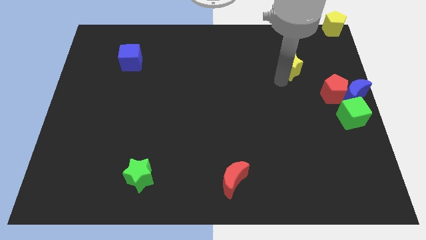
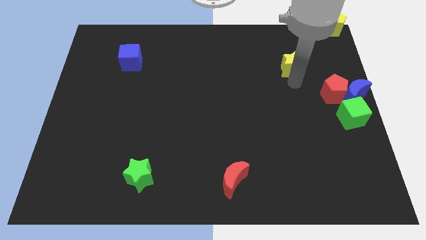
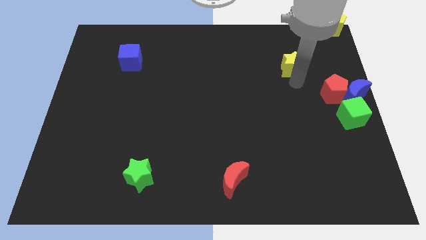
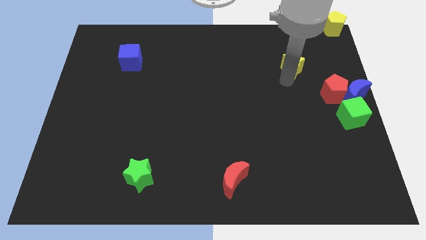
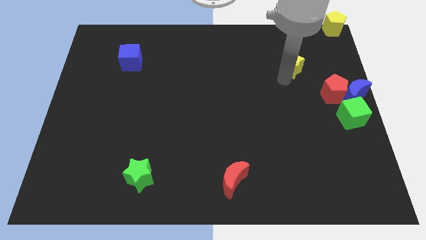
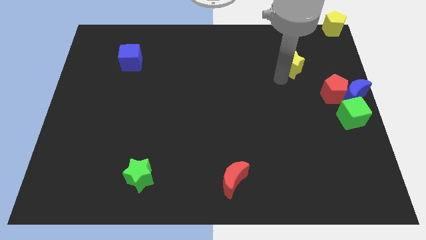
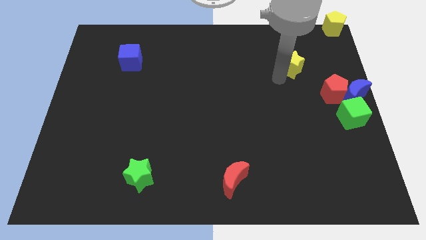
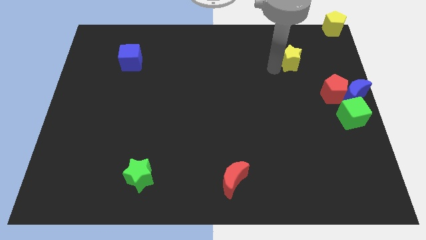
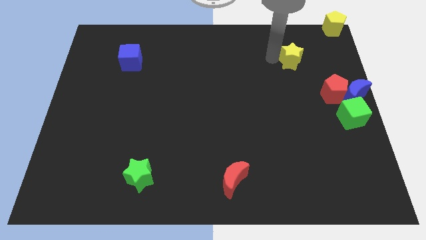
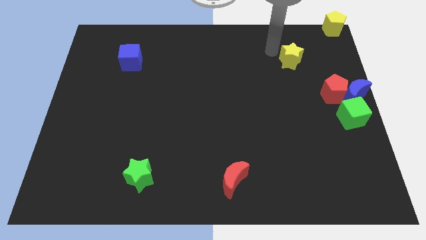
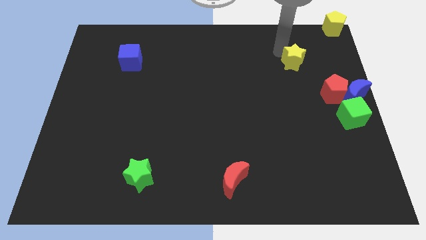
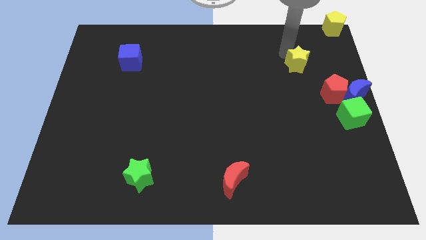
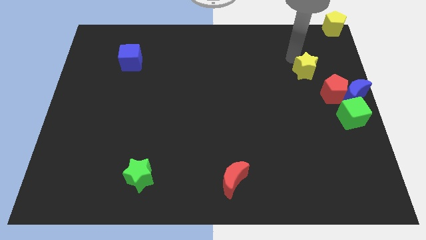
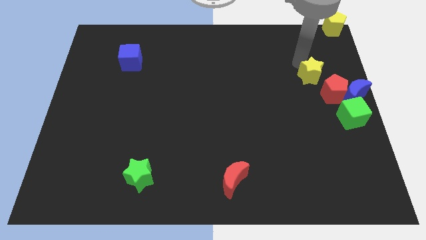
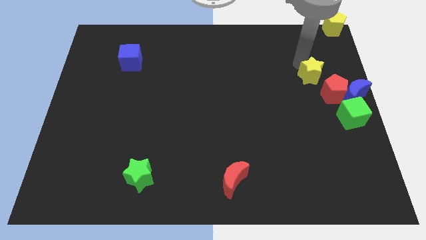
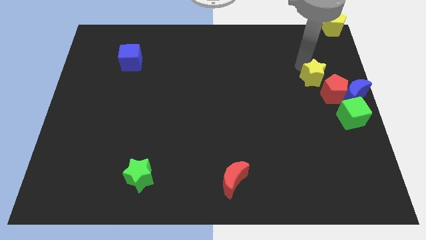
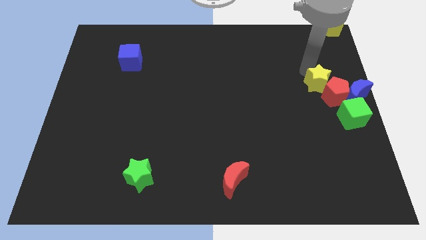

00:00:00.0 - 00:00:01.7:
push the yellow star to the top left of the red pentagon

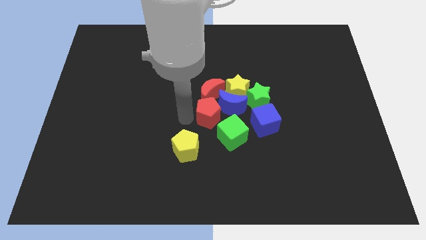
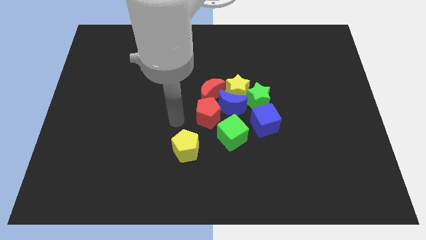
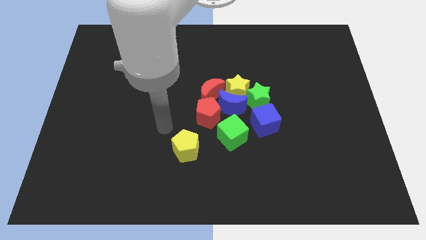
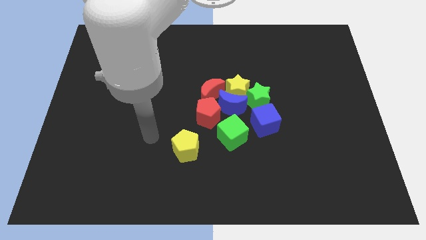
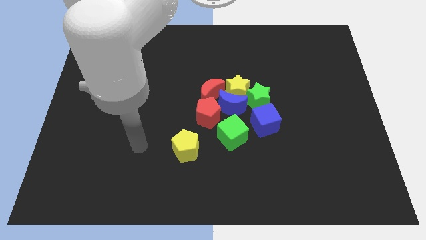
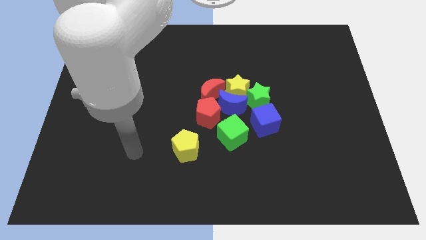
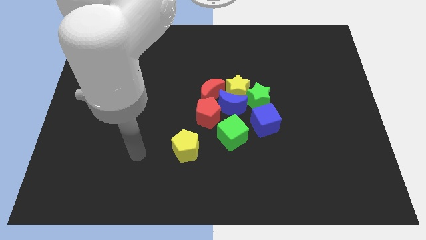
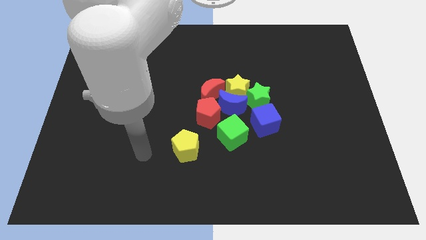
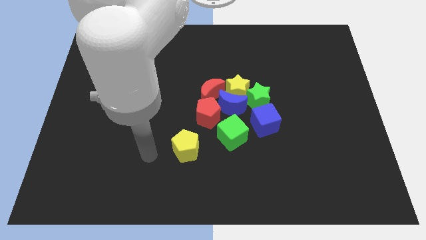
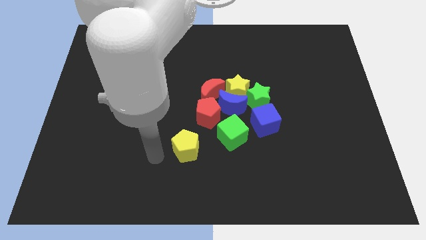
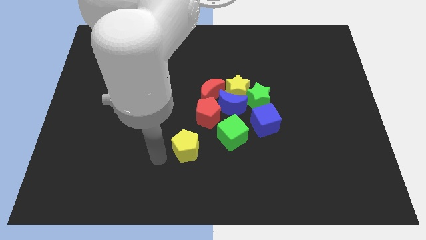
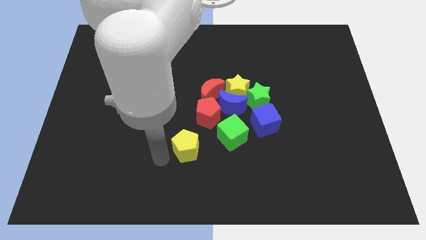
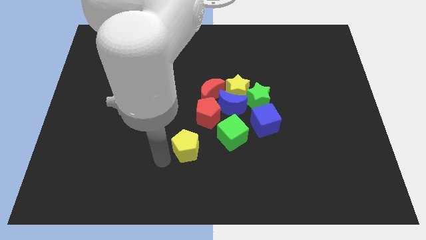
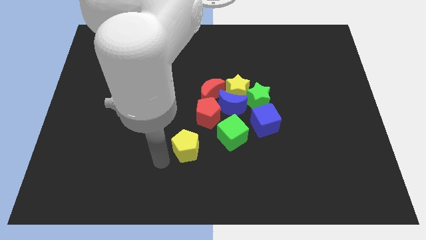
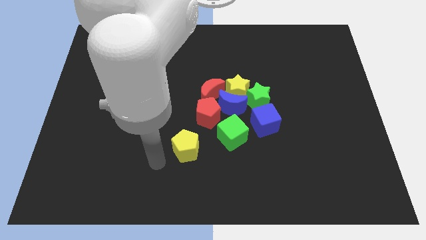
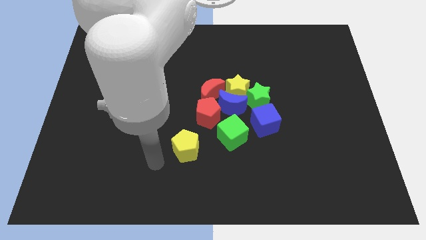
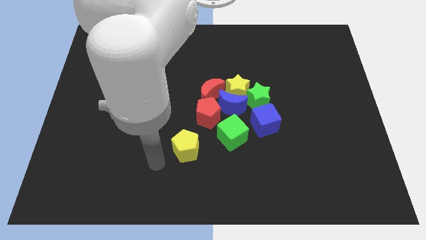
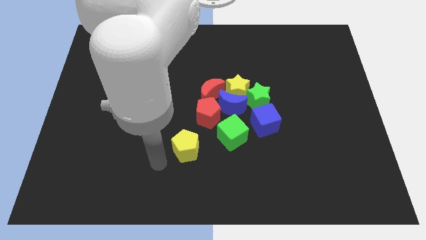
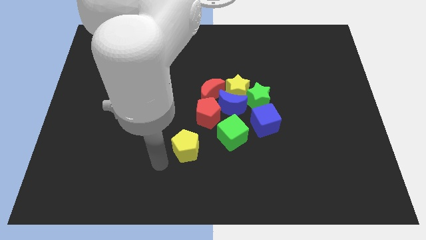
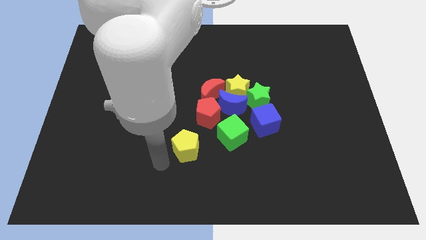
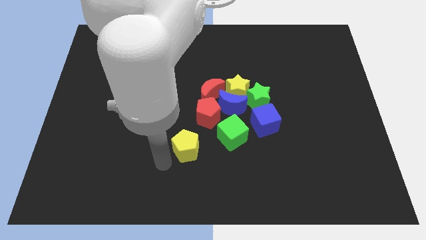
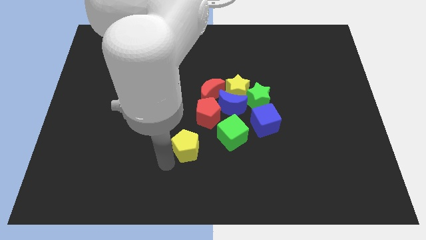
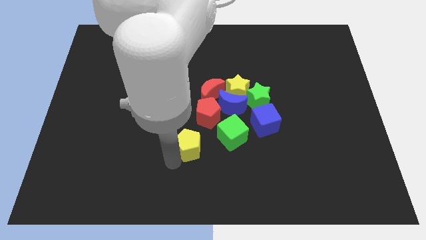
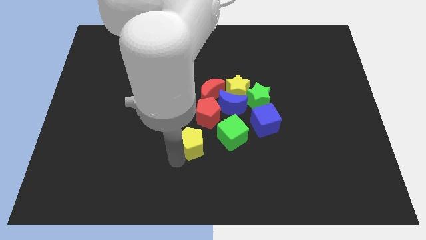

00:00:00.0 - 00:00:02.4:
move your arm into the yellow pentagon

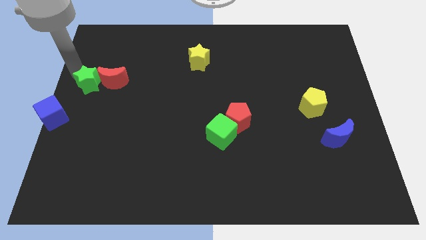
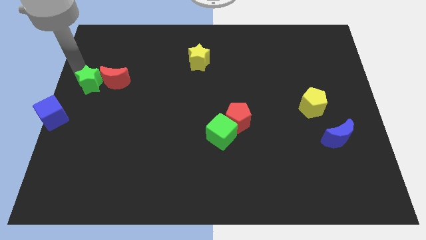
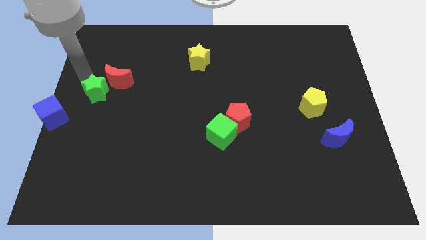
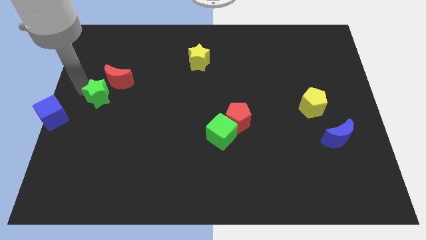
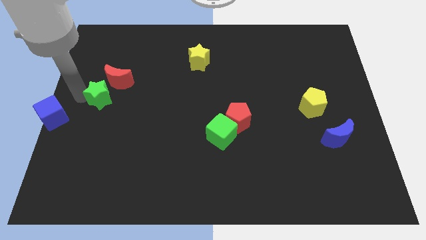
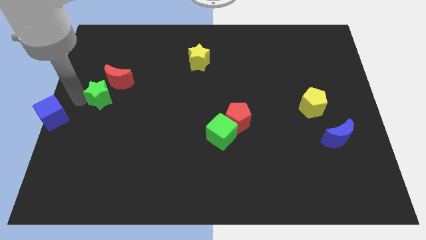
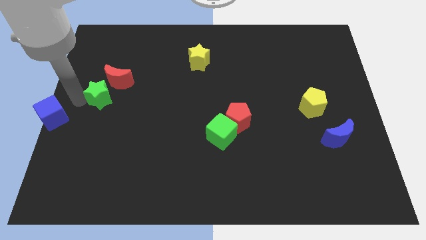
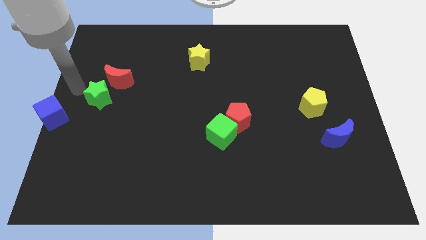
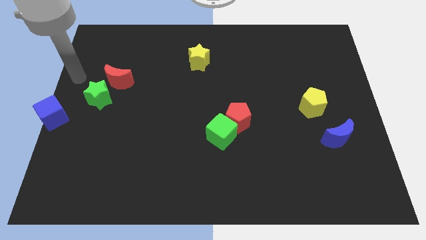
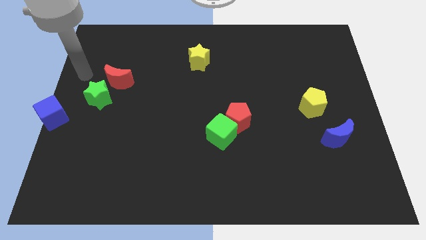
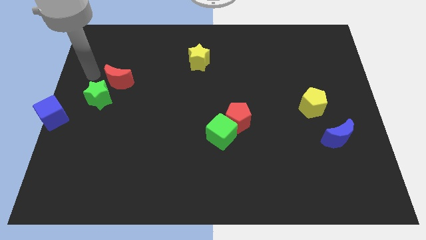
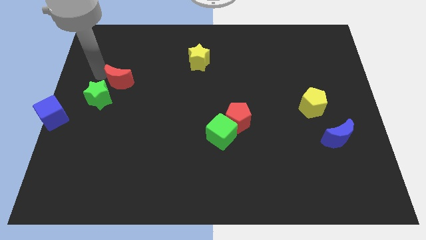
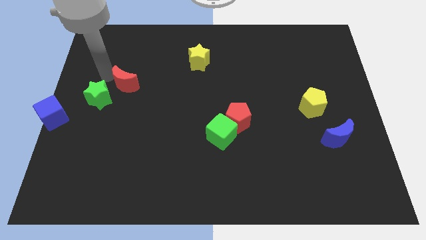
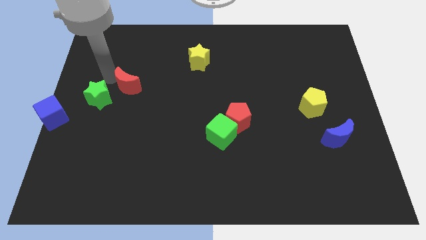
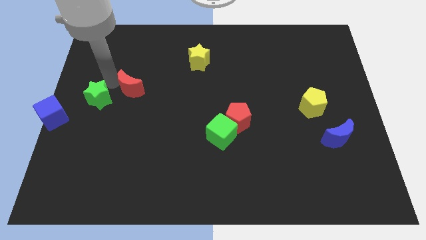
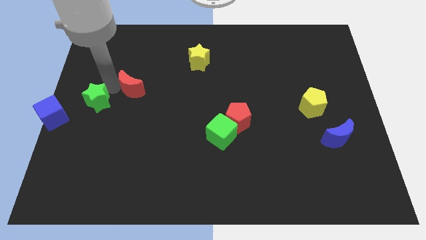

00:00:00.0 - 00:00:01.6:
separate green star and the red crescent

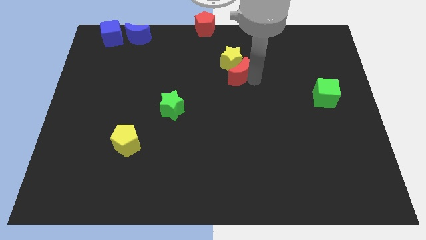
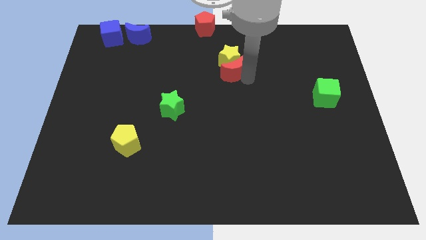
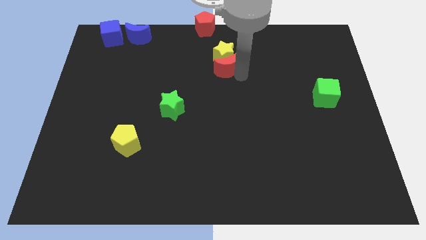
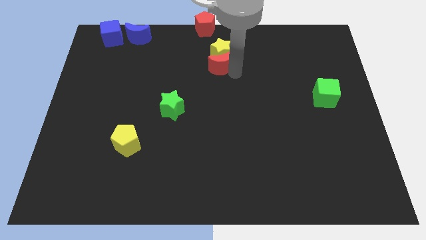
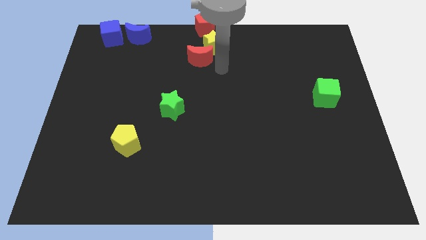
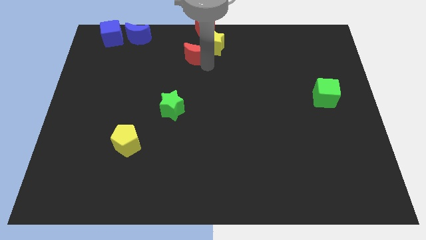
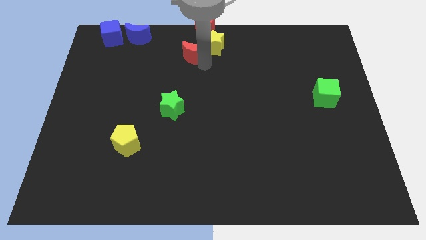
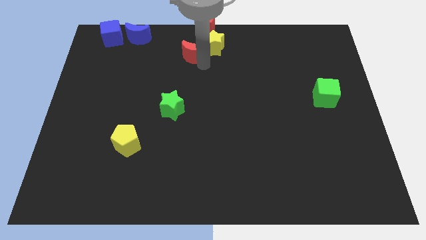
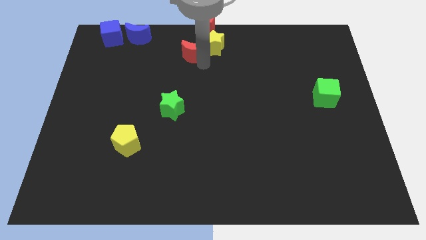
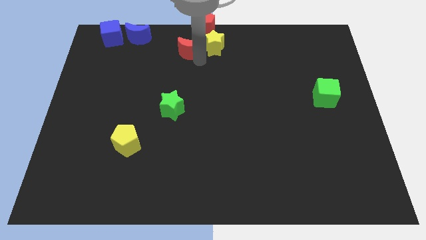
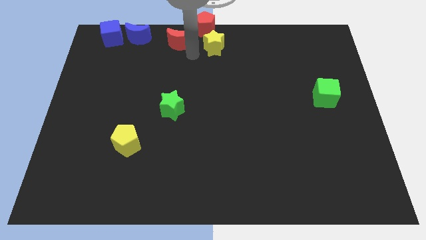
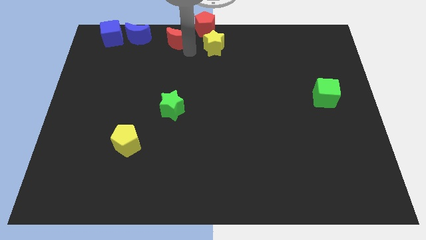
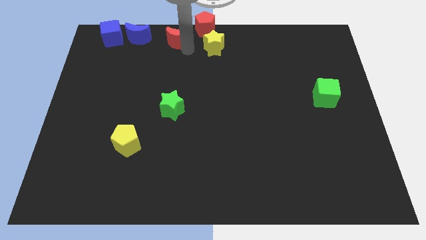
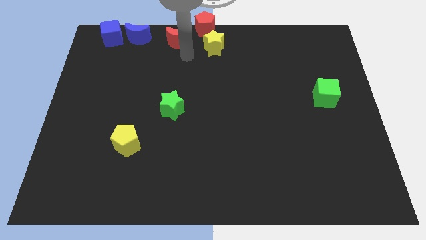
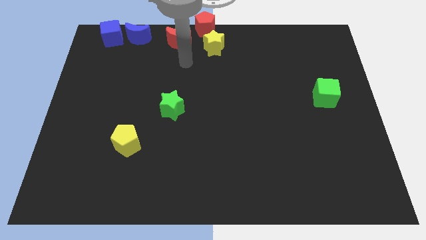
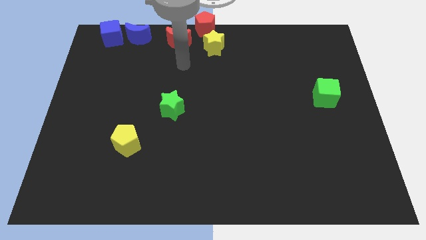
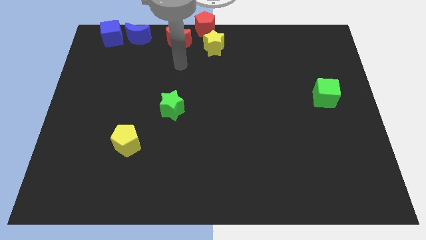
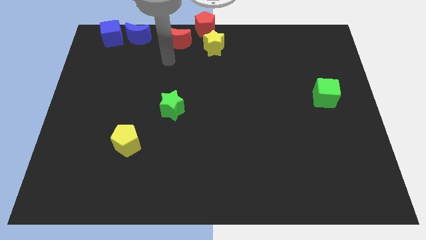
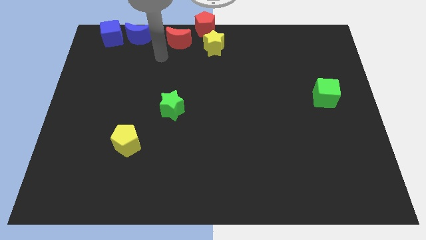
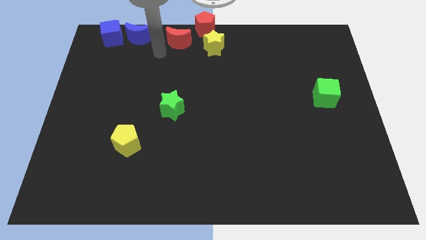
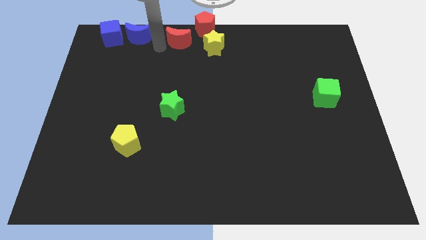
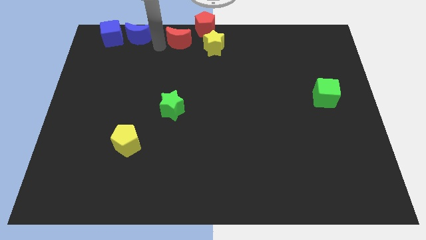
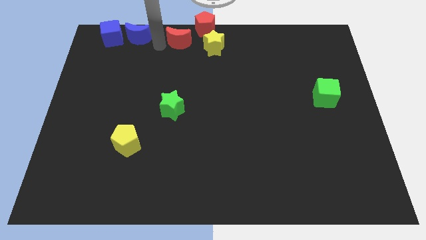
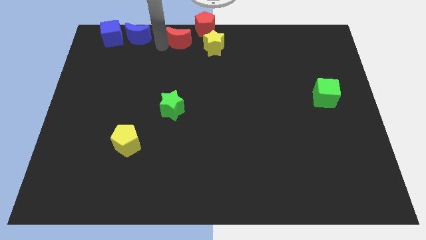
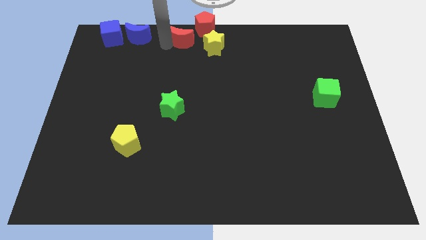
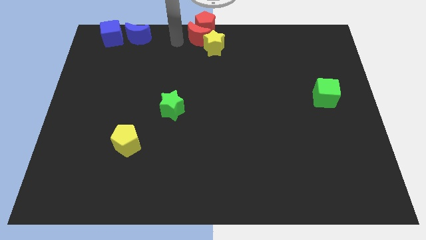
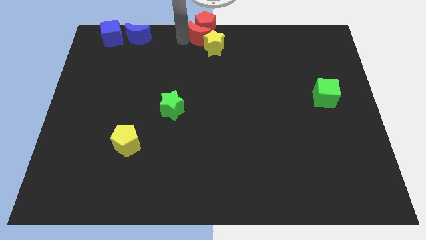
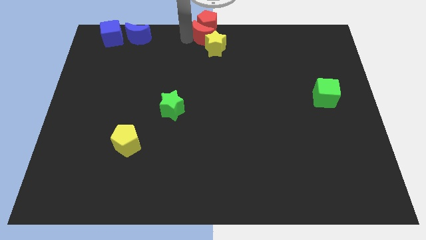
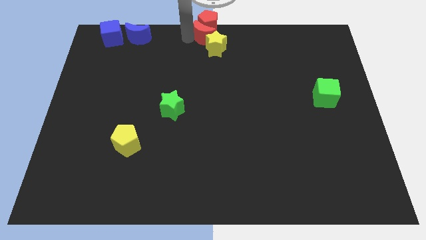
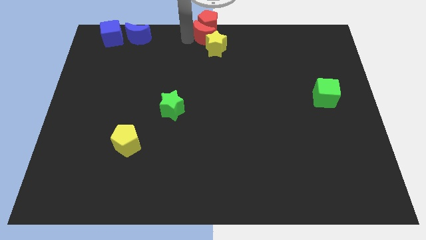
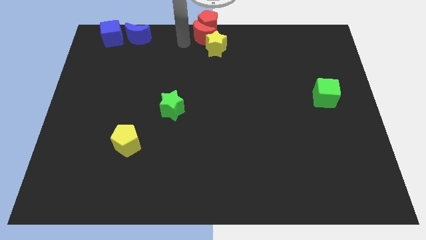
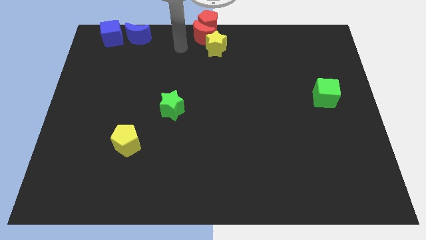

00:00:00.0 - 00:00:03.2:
push the red moon in to red pentagon
